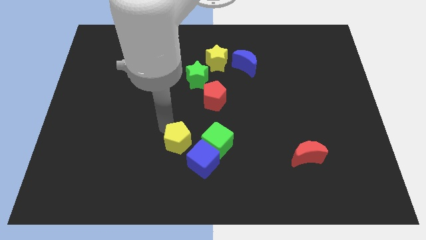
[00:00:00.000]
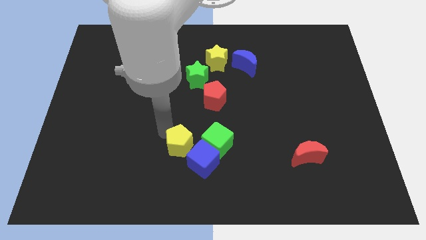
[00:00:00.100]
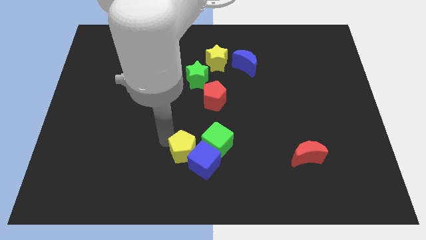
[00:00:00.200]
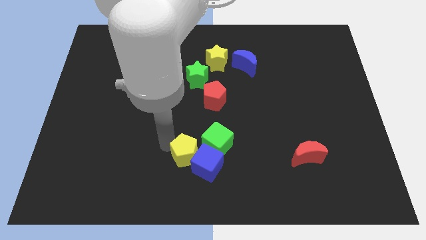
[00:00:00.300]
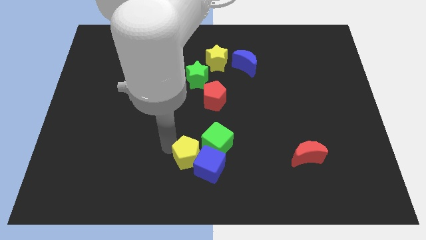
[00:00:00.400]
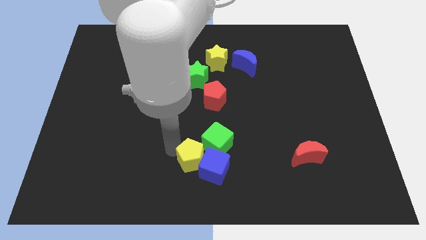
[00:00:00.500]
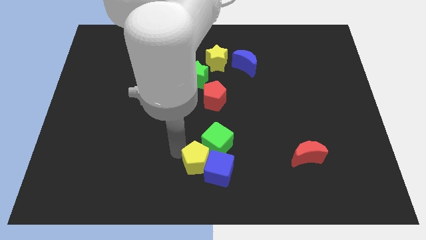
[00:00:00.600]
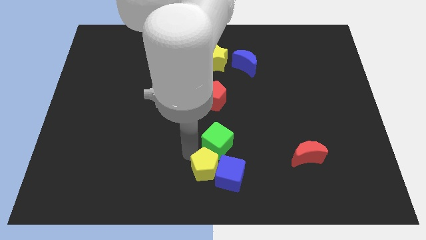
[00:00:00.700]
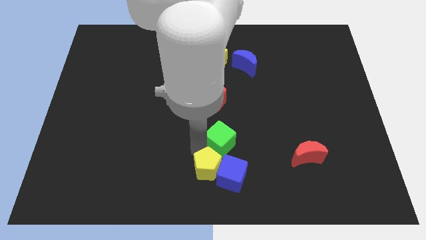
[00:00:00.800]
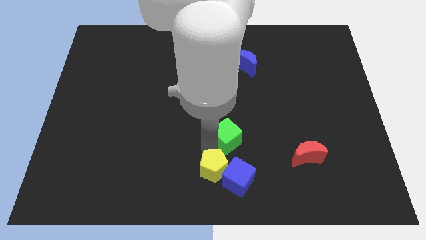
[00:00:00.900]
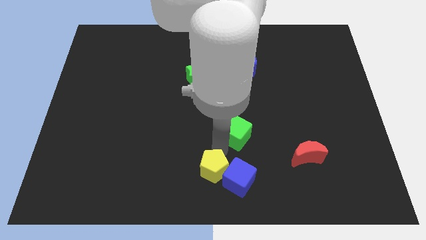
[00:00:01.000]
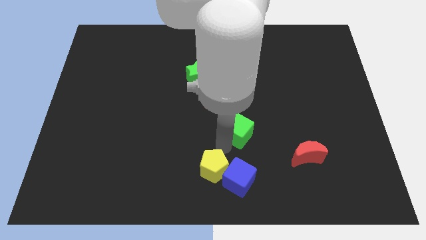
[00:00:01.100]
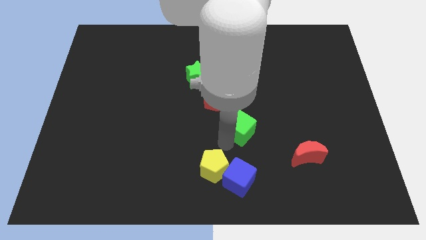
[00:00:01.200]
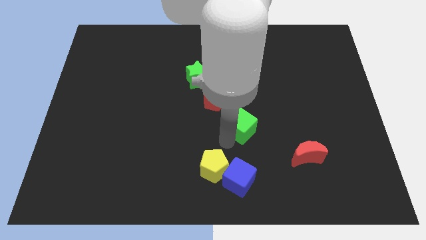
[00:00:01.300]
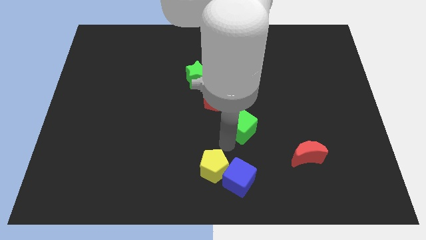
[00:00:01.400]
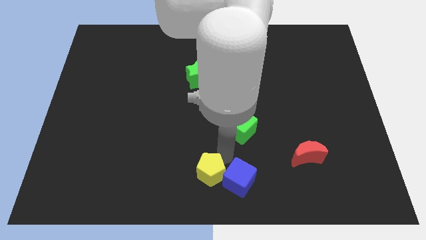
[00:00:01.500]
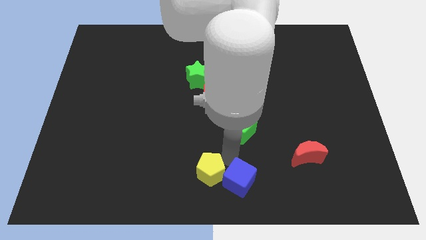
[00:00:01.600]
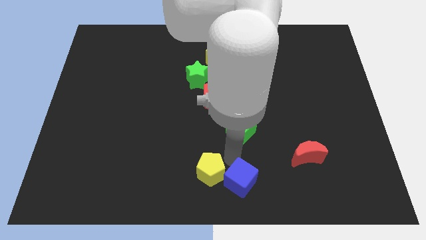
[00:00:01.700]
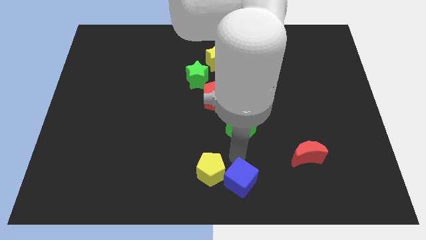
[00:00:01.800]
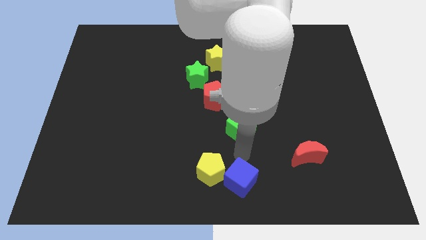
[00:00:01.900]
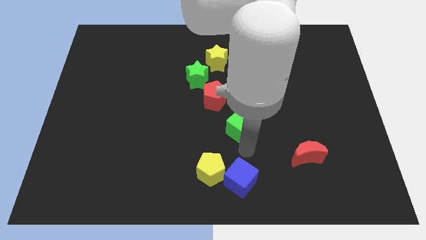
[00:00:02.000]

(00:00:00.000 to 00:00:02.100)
separate green cube from yellow pentagon

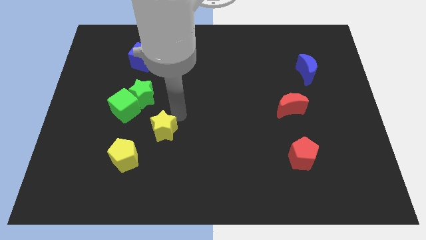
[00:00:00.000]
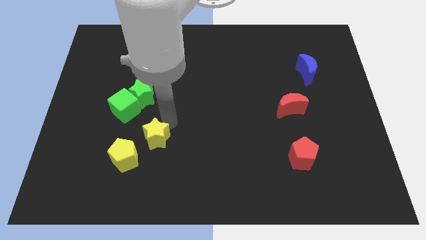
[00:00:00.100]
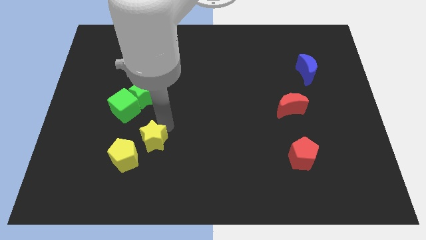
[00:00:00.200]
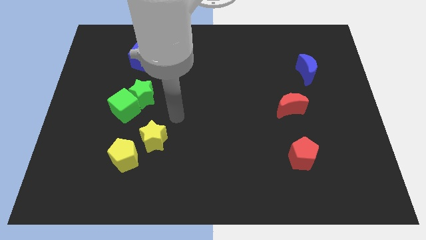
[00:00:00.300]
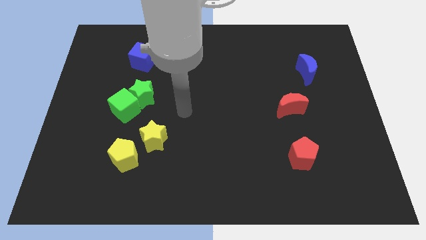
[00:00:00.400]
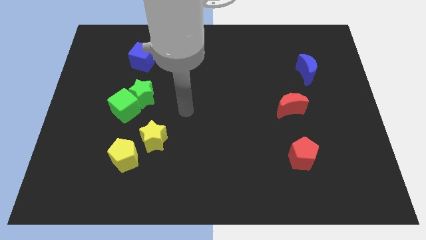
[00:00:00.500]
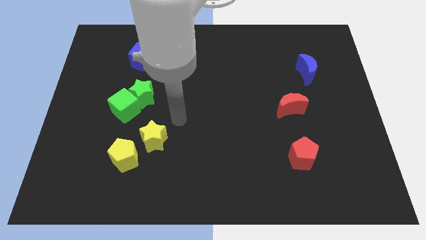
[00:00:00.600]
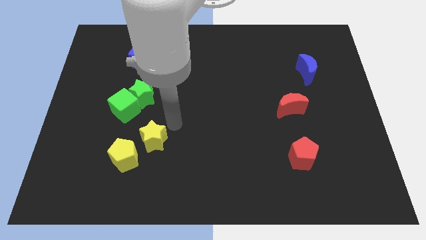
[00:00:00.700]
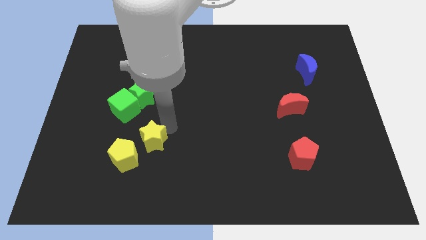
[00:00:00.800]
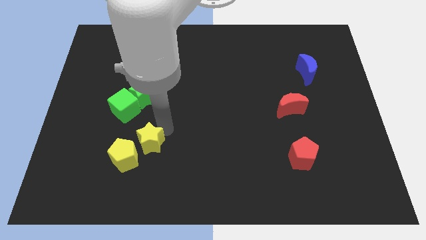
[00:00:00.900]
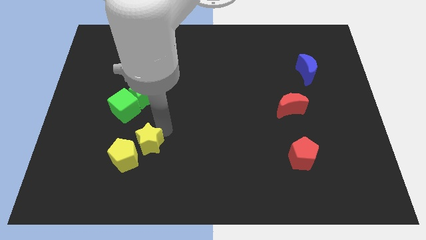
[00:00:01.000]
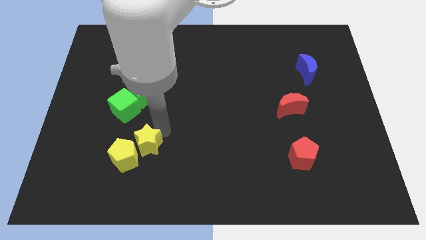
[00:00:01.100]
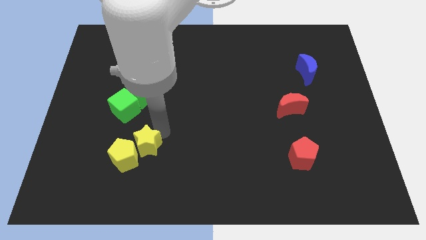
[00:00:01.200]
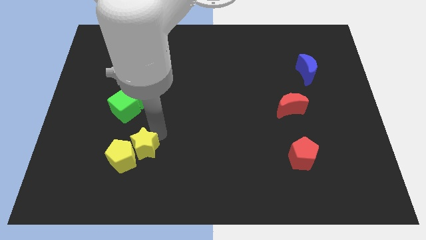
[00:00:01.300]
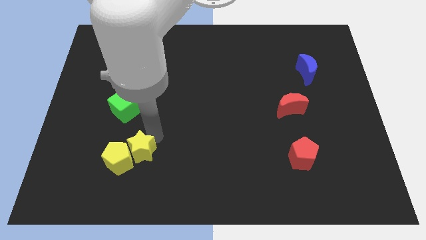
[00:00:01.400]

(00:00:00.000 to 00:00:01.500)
push the yellow star into the yellow pentagon

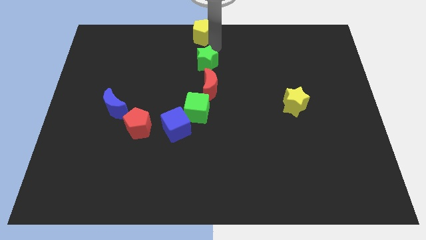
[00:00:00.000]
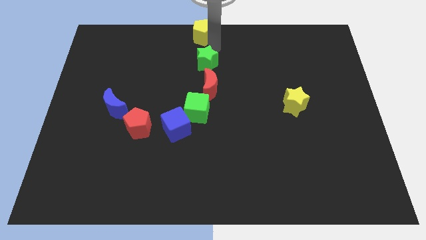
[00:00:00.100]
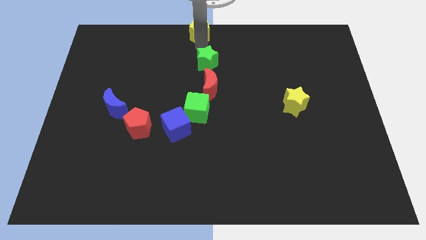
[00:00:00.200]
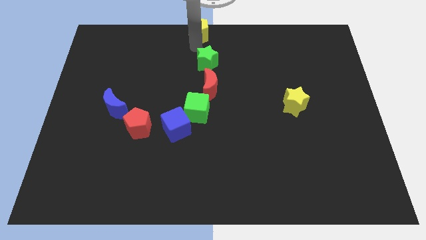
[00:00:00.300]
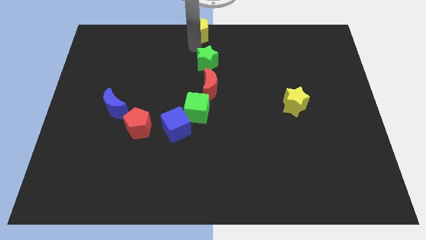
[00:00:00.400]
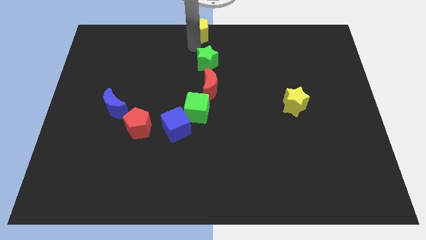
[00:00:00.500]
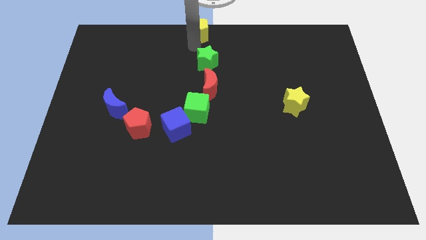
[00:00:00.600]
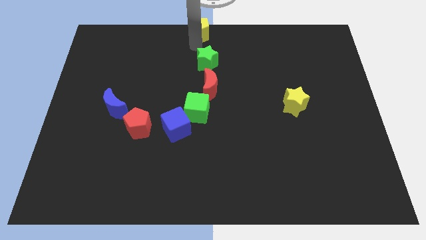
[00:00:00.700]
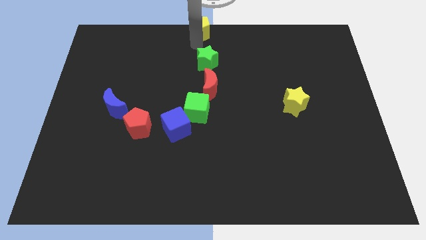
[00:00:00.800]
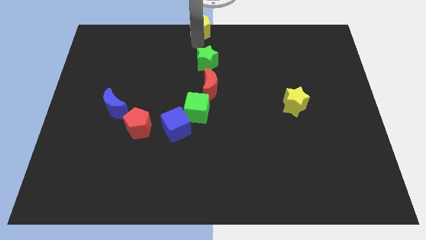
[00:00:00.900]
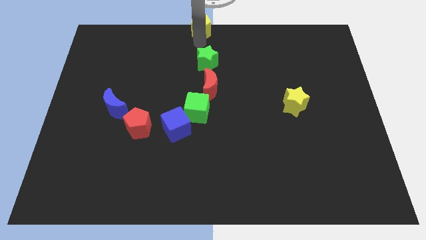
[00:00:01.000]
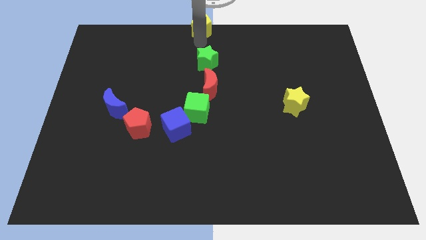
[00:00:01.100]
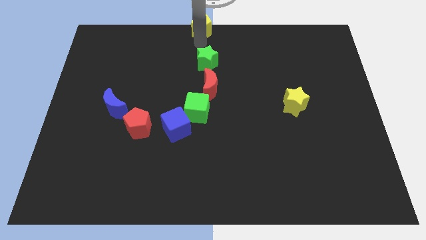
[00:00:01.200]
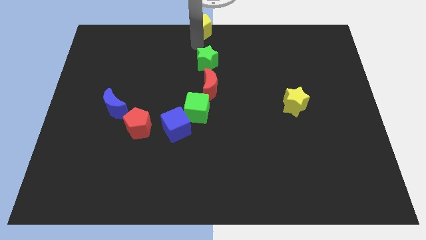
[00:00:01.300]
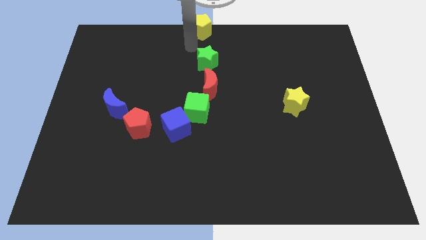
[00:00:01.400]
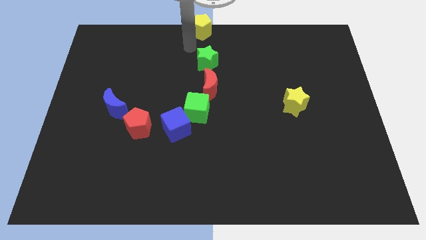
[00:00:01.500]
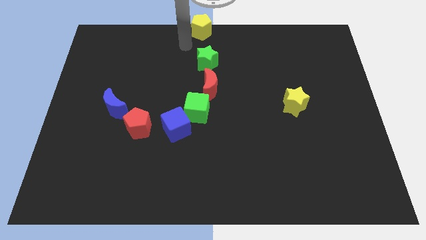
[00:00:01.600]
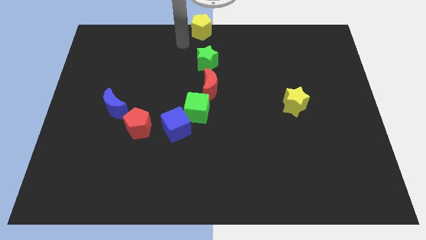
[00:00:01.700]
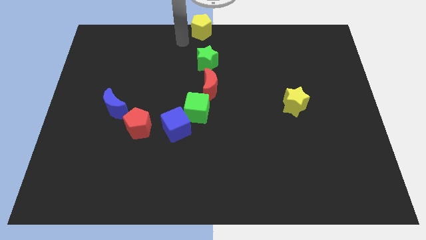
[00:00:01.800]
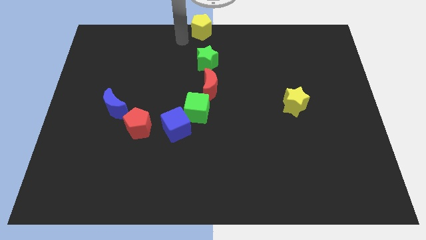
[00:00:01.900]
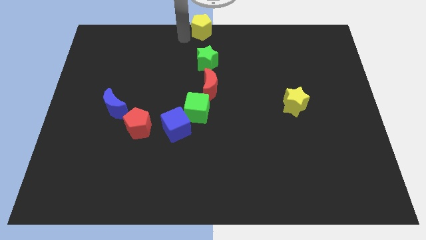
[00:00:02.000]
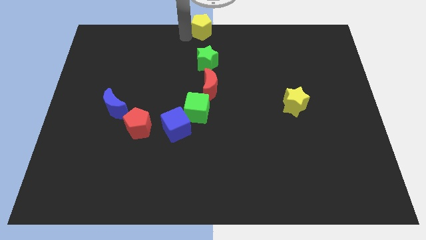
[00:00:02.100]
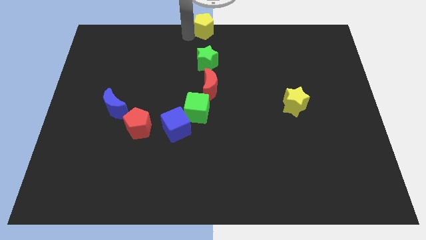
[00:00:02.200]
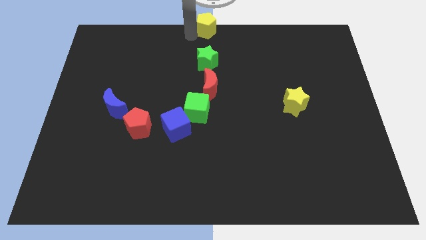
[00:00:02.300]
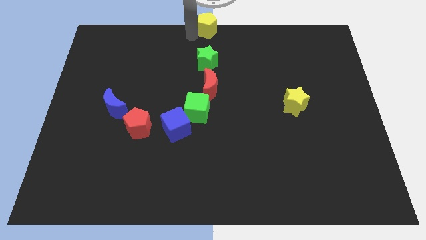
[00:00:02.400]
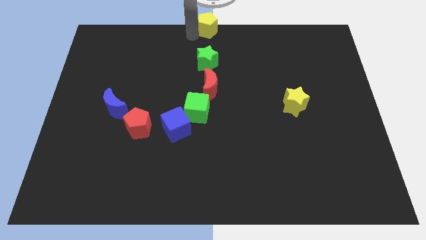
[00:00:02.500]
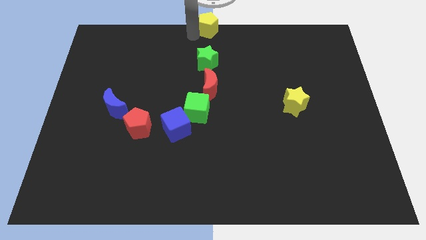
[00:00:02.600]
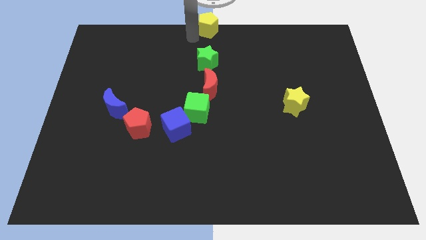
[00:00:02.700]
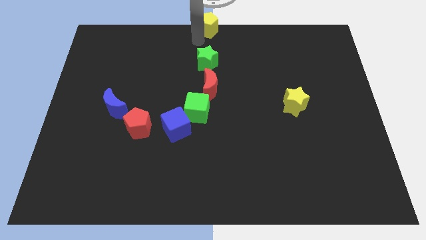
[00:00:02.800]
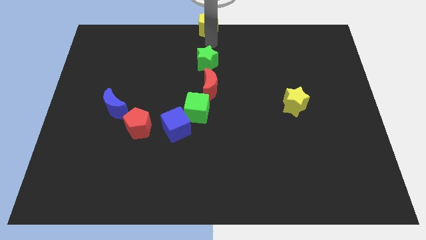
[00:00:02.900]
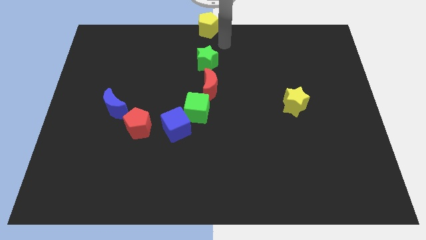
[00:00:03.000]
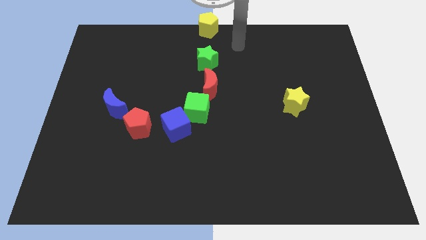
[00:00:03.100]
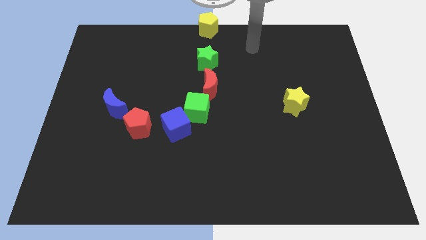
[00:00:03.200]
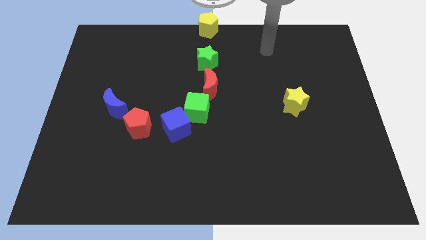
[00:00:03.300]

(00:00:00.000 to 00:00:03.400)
move the yellow pentagon slightly to top center

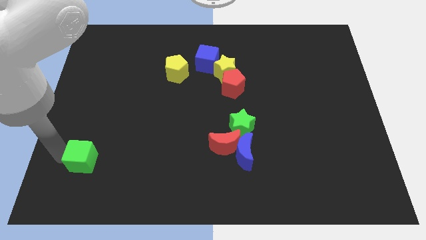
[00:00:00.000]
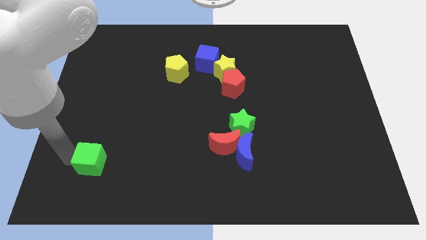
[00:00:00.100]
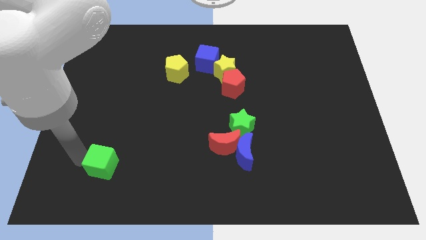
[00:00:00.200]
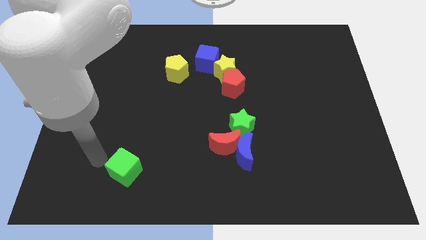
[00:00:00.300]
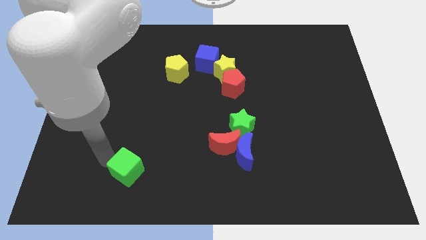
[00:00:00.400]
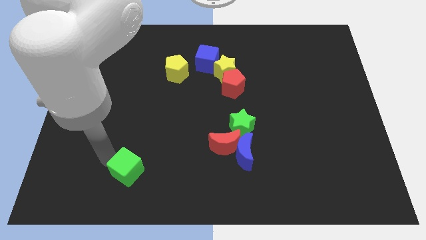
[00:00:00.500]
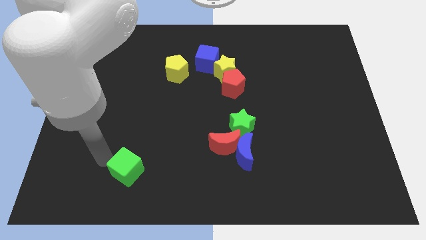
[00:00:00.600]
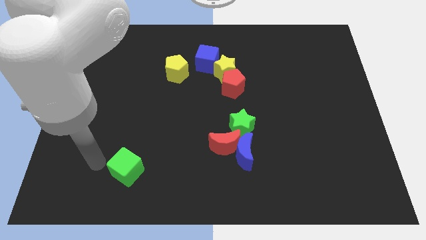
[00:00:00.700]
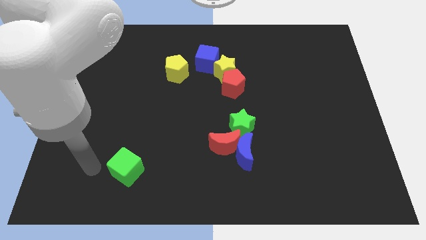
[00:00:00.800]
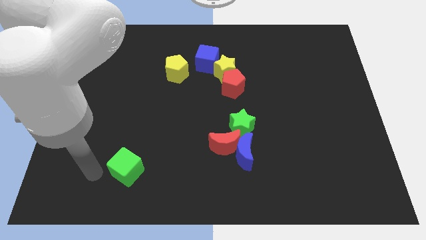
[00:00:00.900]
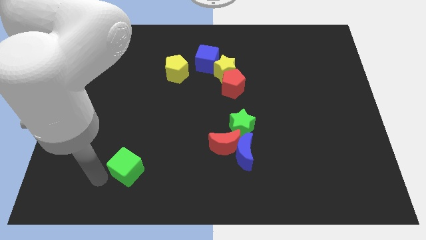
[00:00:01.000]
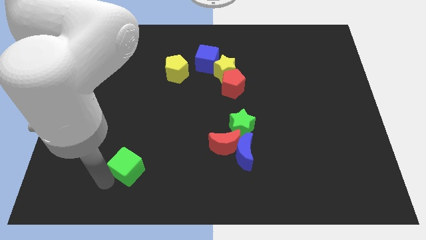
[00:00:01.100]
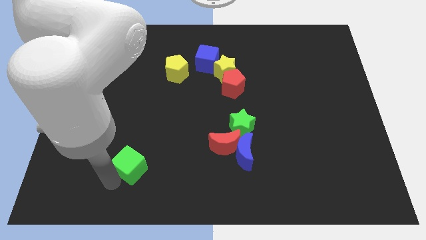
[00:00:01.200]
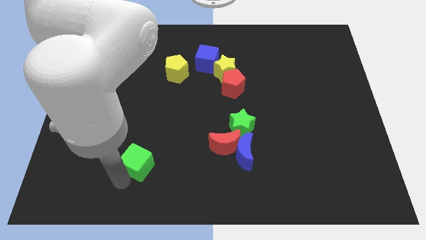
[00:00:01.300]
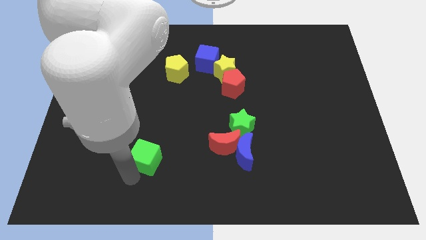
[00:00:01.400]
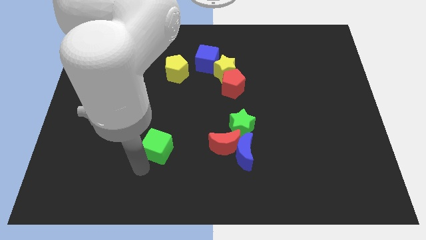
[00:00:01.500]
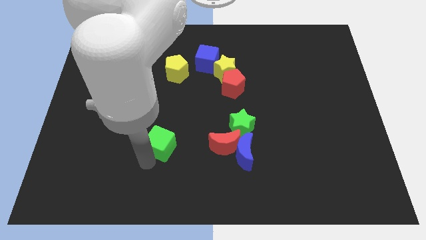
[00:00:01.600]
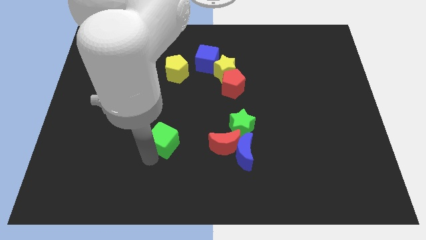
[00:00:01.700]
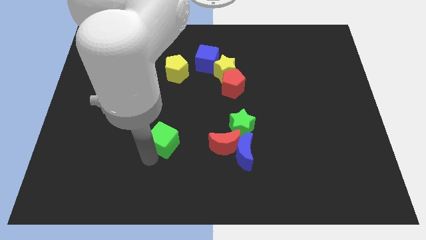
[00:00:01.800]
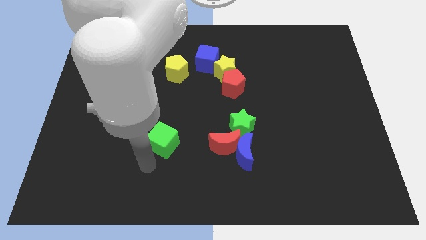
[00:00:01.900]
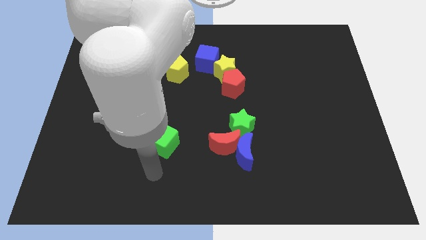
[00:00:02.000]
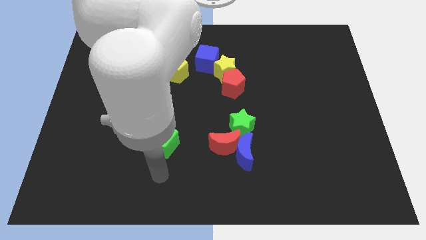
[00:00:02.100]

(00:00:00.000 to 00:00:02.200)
push green cube to the left of red moon
